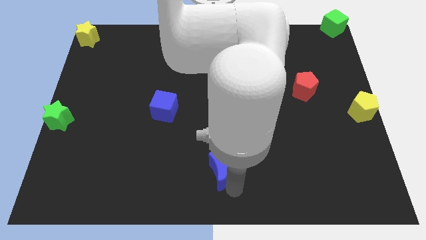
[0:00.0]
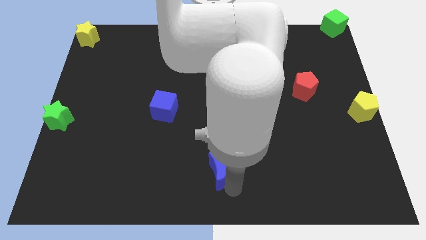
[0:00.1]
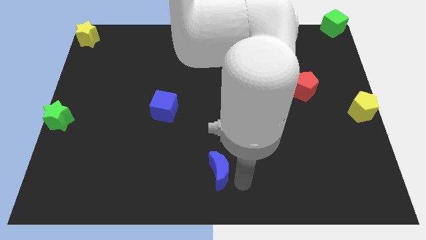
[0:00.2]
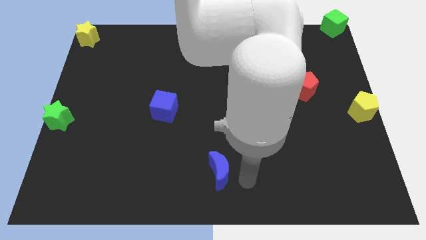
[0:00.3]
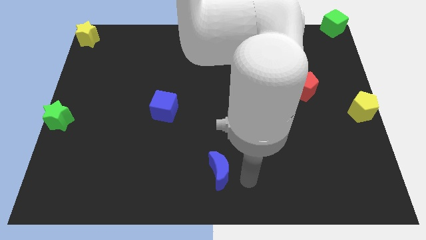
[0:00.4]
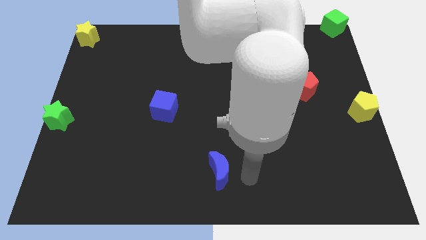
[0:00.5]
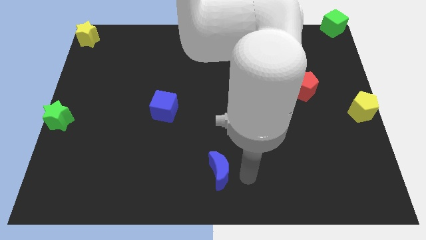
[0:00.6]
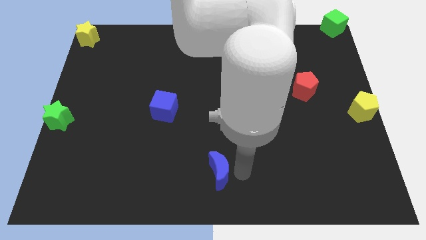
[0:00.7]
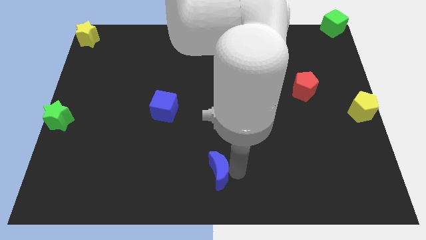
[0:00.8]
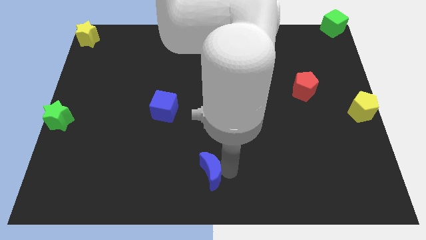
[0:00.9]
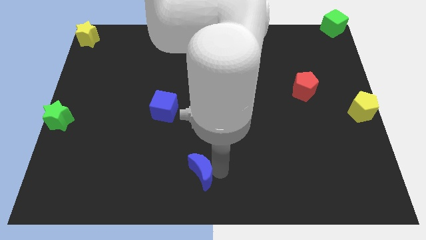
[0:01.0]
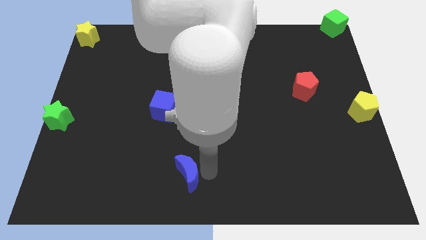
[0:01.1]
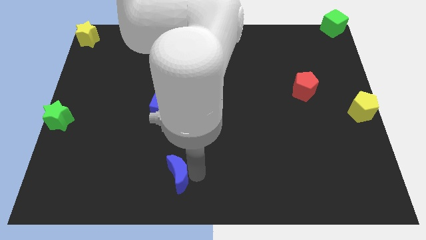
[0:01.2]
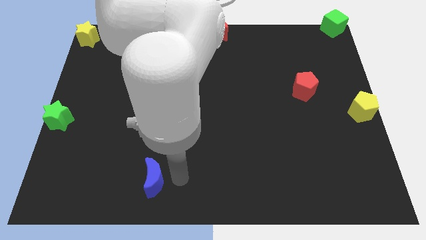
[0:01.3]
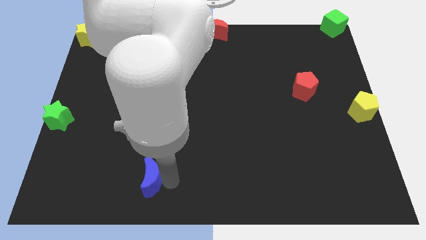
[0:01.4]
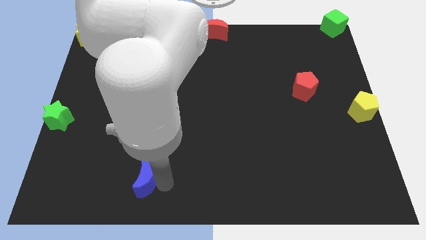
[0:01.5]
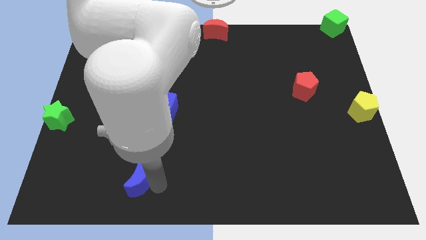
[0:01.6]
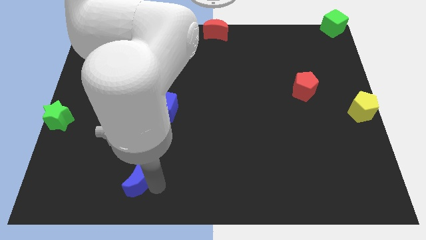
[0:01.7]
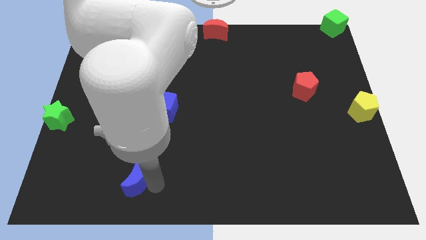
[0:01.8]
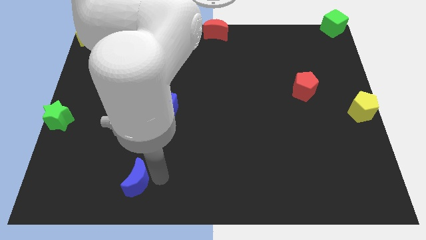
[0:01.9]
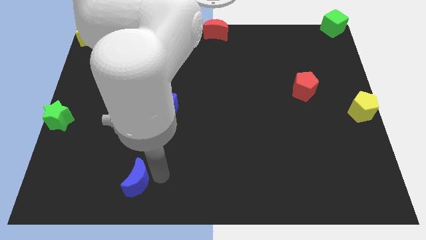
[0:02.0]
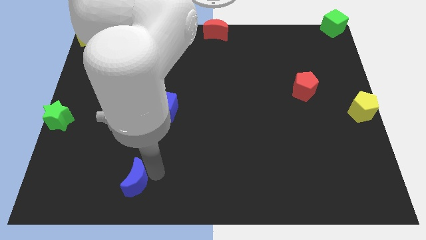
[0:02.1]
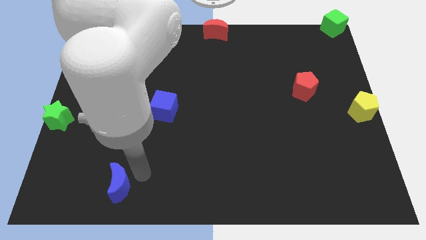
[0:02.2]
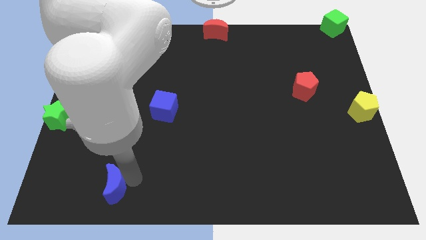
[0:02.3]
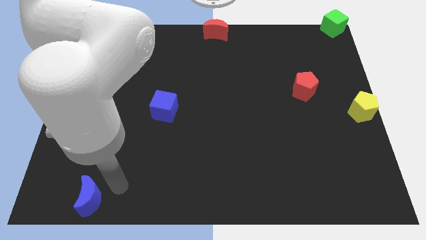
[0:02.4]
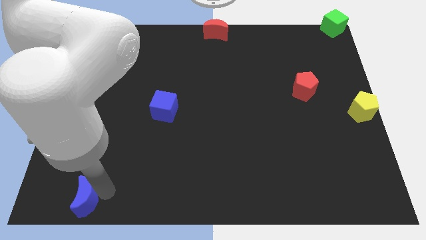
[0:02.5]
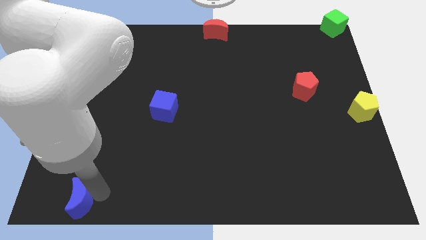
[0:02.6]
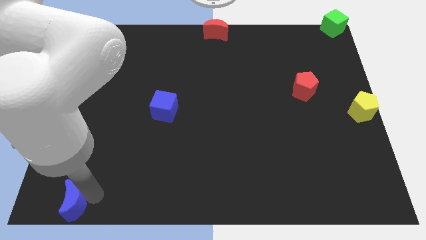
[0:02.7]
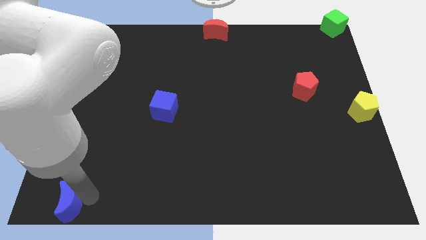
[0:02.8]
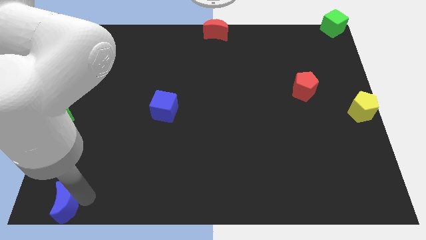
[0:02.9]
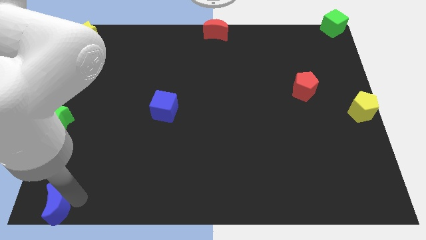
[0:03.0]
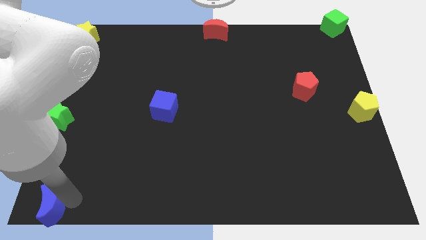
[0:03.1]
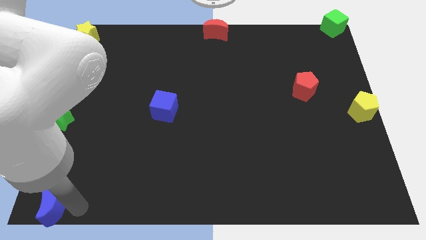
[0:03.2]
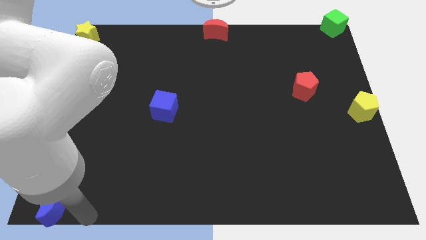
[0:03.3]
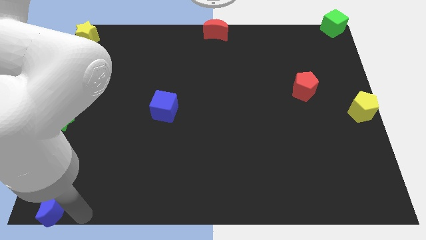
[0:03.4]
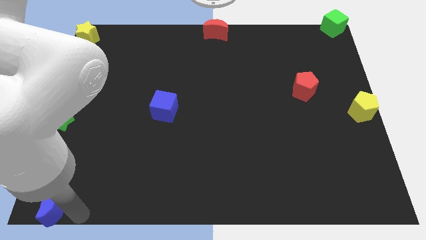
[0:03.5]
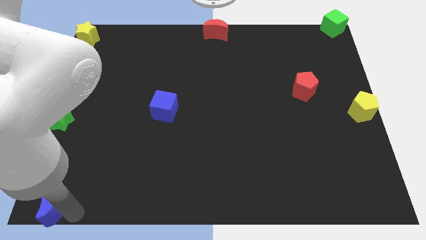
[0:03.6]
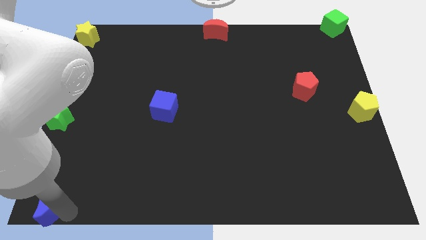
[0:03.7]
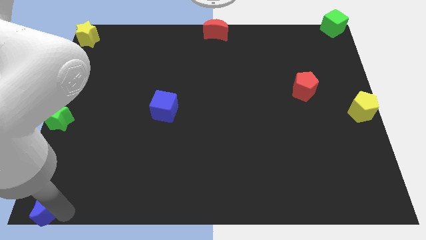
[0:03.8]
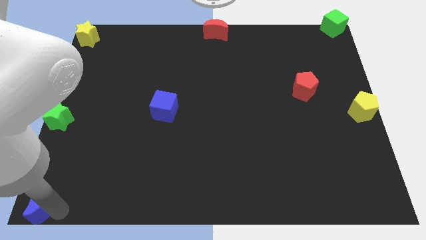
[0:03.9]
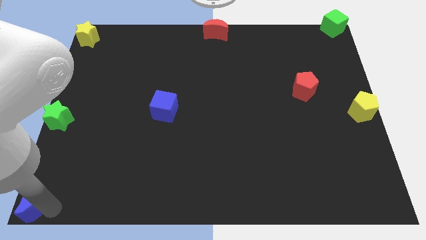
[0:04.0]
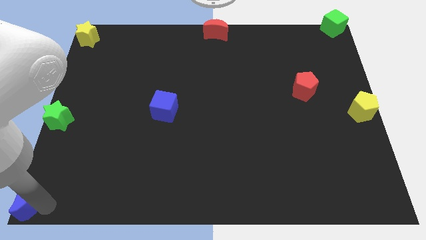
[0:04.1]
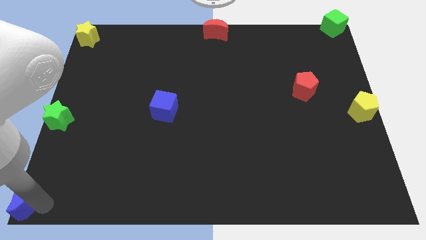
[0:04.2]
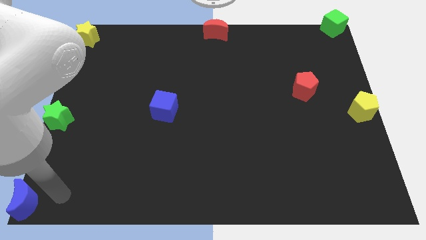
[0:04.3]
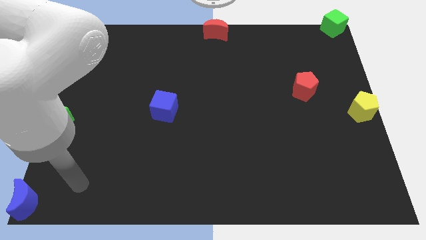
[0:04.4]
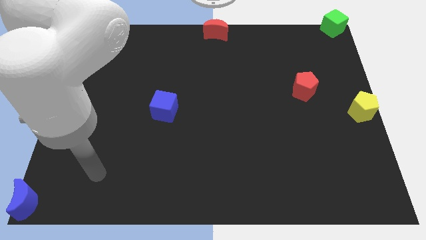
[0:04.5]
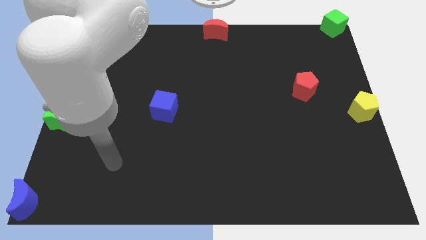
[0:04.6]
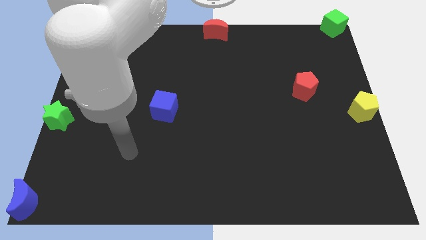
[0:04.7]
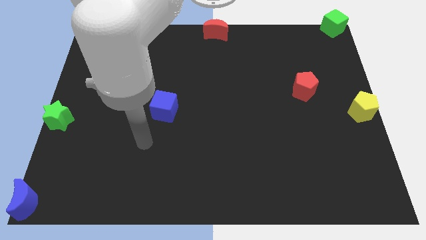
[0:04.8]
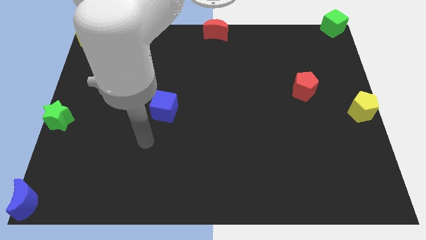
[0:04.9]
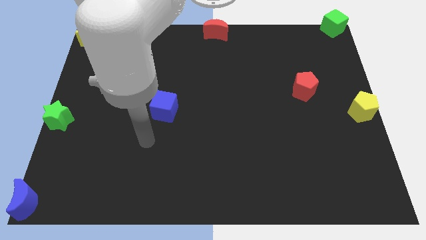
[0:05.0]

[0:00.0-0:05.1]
move the blue crescent to the bottom left corner of the board

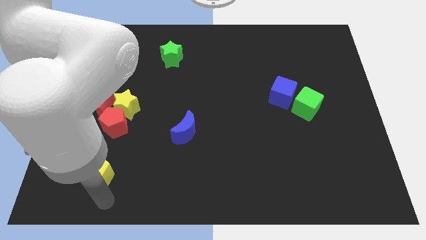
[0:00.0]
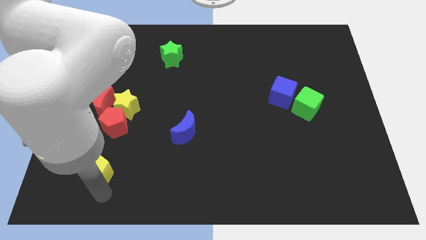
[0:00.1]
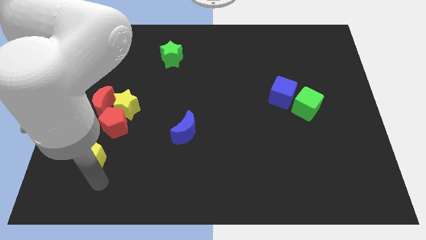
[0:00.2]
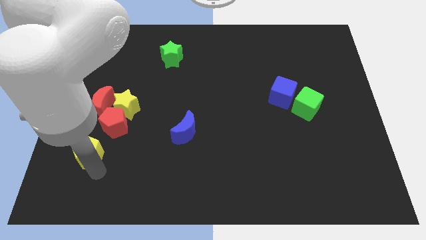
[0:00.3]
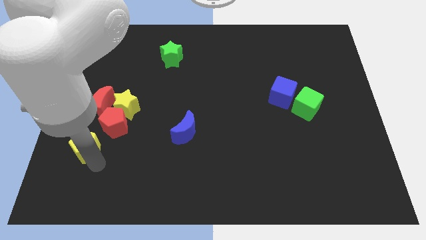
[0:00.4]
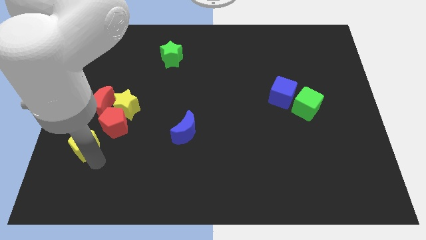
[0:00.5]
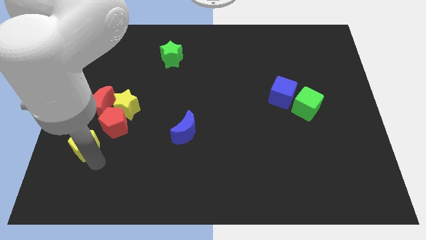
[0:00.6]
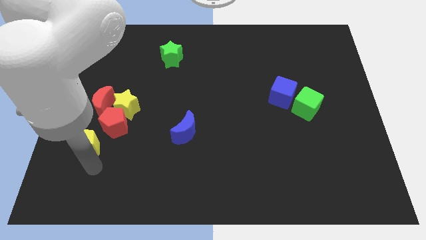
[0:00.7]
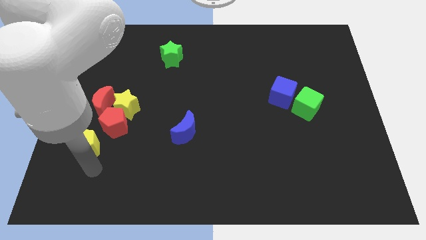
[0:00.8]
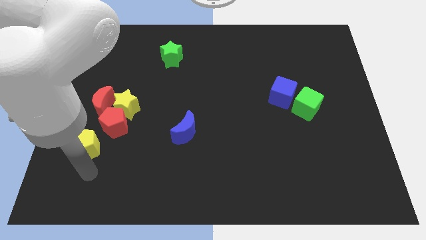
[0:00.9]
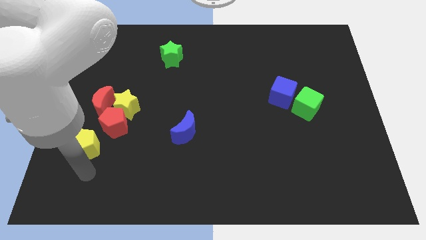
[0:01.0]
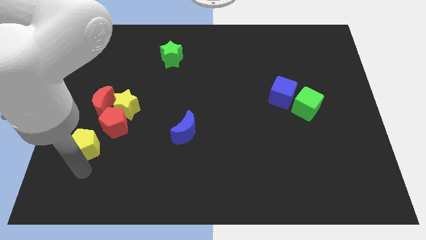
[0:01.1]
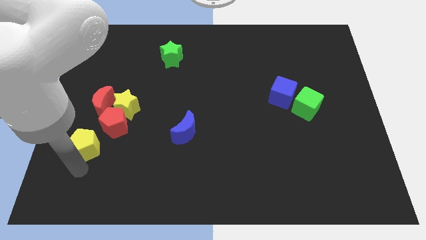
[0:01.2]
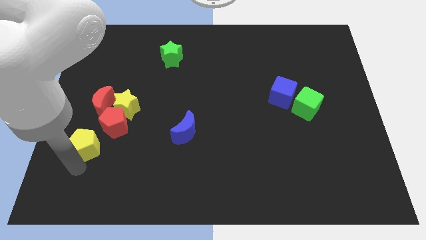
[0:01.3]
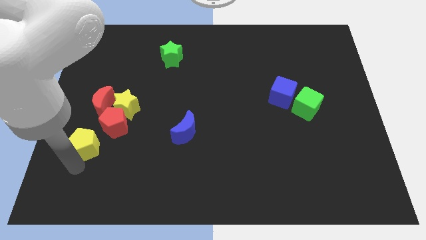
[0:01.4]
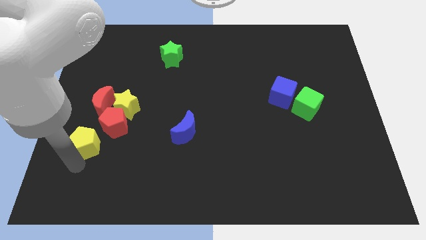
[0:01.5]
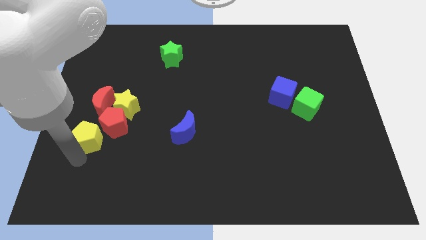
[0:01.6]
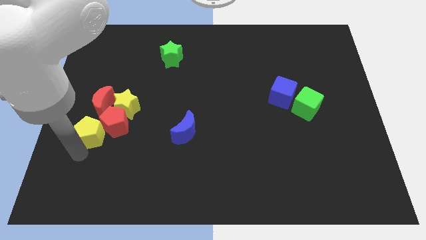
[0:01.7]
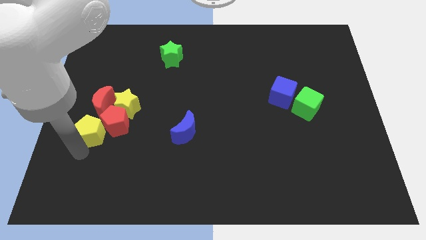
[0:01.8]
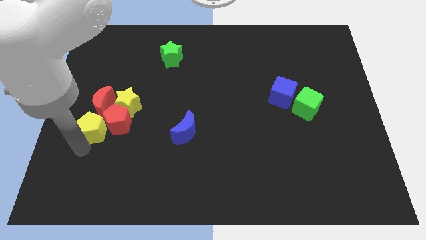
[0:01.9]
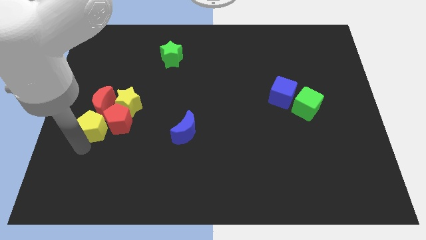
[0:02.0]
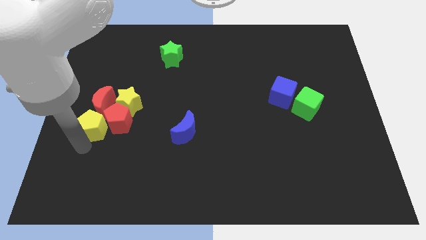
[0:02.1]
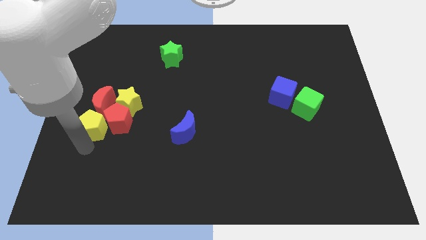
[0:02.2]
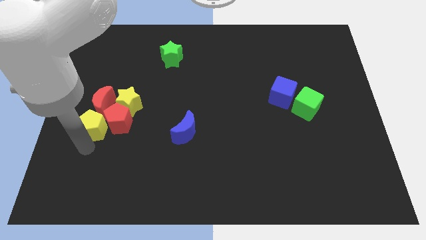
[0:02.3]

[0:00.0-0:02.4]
push the yellow pentagon into red moon at the bottom

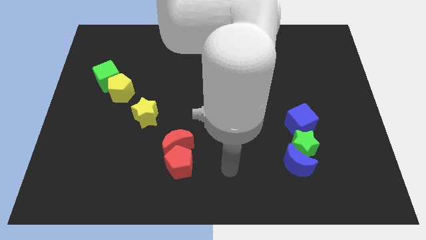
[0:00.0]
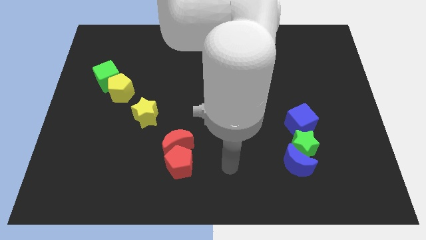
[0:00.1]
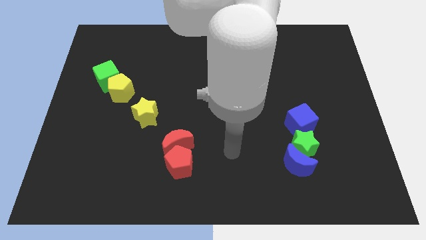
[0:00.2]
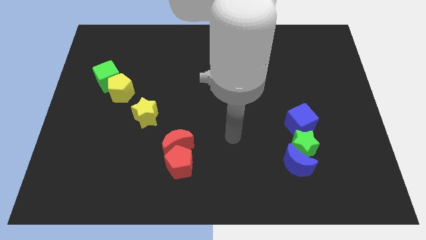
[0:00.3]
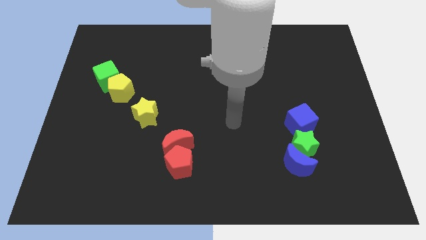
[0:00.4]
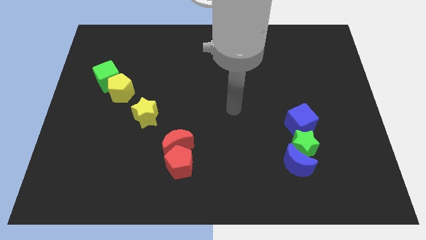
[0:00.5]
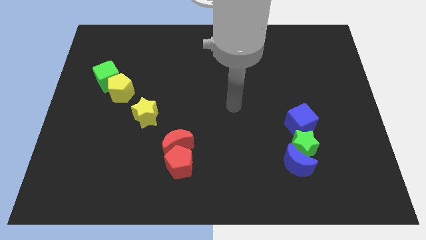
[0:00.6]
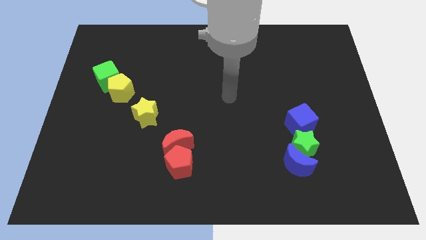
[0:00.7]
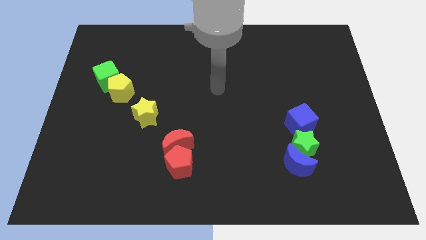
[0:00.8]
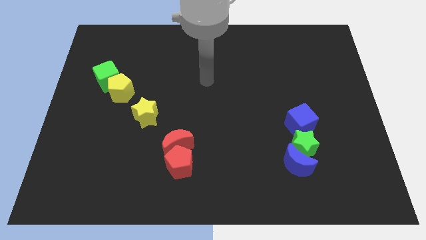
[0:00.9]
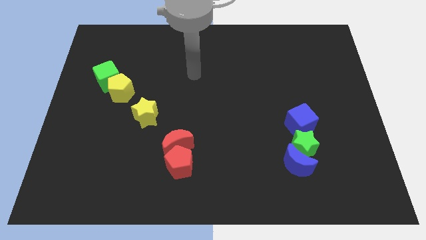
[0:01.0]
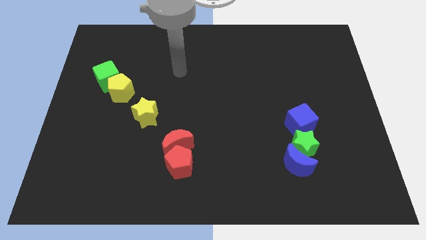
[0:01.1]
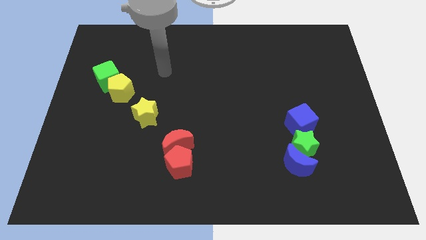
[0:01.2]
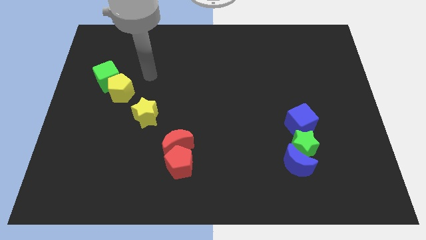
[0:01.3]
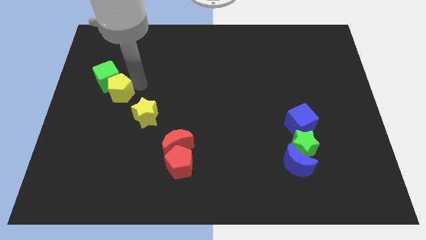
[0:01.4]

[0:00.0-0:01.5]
place the arm to the right side of the yellow pentagon
